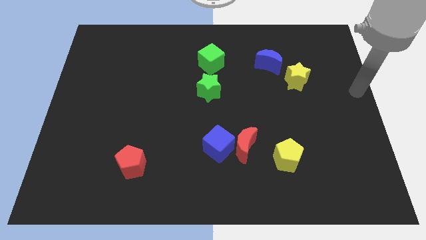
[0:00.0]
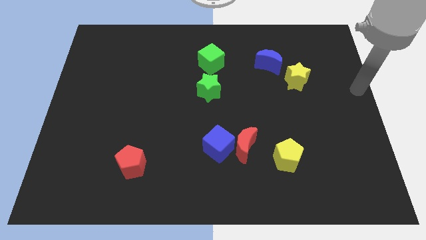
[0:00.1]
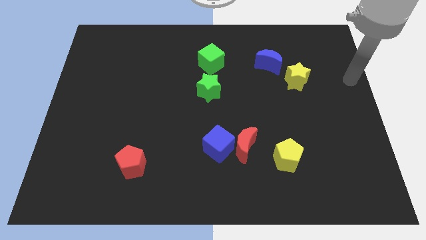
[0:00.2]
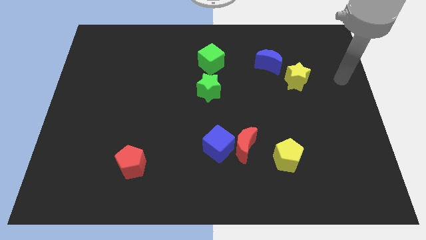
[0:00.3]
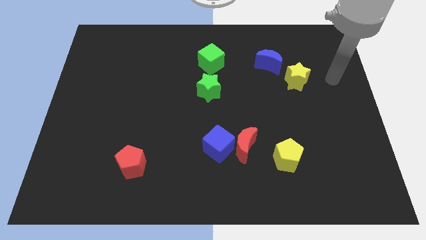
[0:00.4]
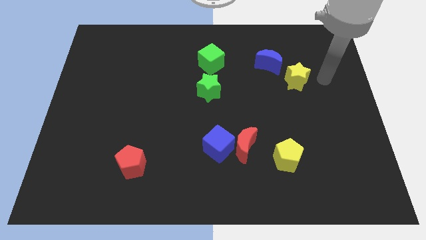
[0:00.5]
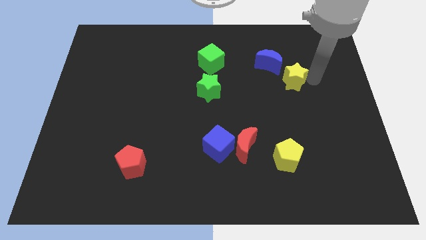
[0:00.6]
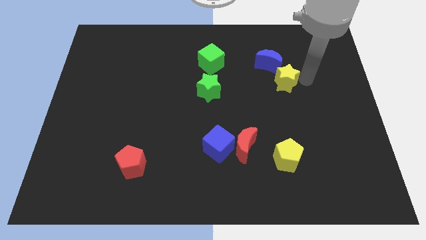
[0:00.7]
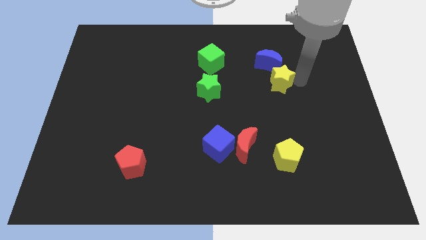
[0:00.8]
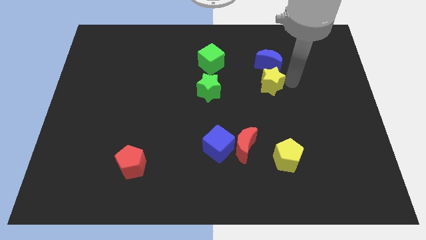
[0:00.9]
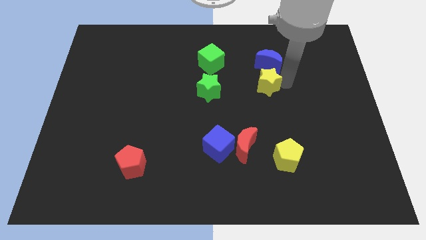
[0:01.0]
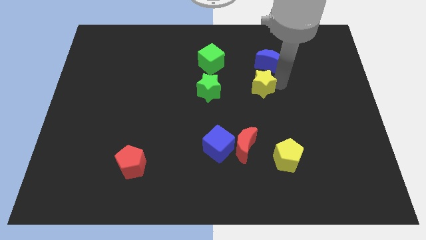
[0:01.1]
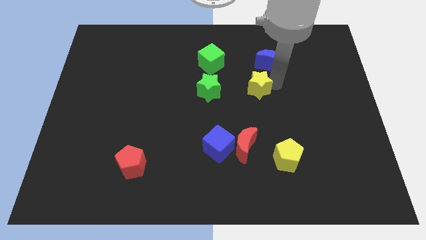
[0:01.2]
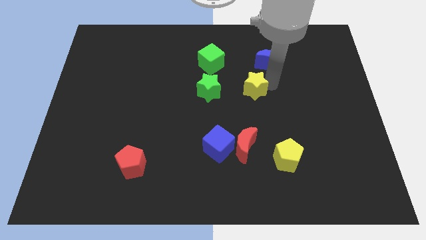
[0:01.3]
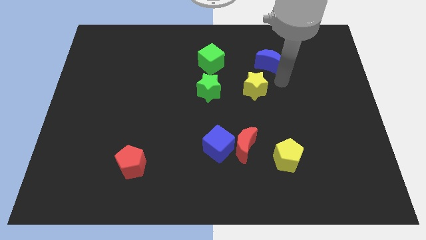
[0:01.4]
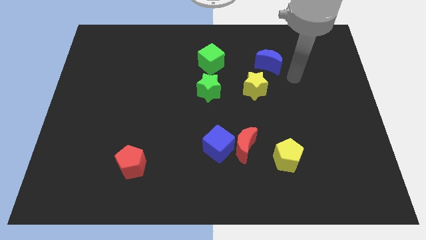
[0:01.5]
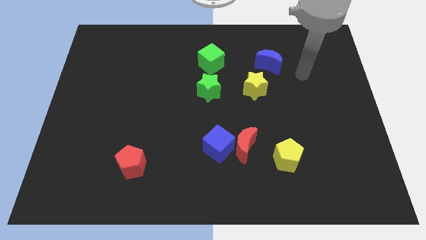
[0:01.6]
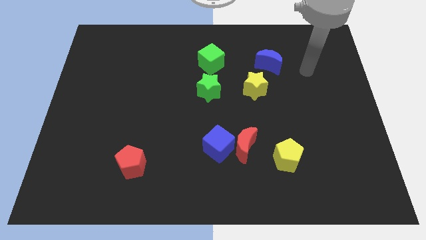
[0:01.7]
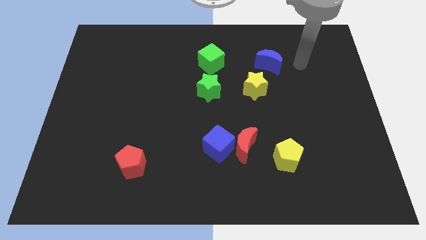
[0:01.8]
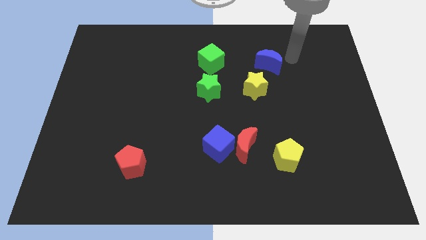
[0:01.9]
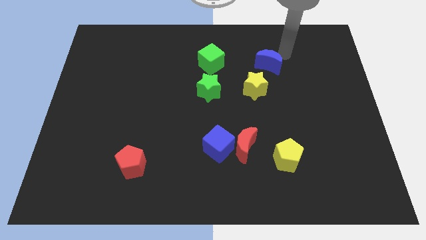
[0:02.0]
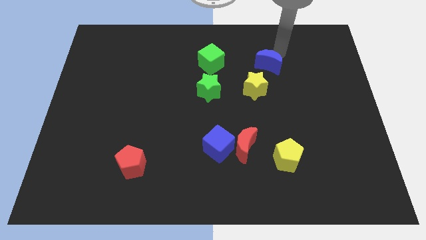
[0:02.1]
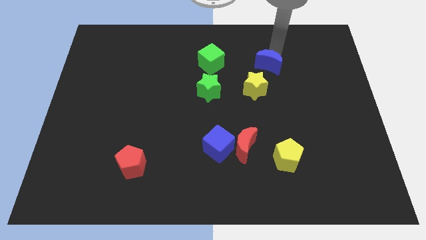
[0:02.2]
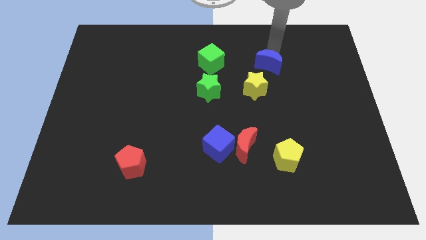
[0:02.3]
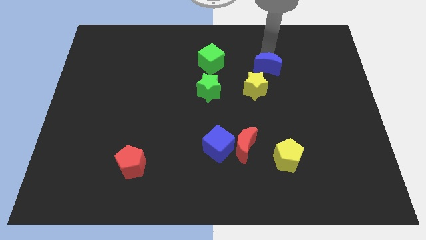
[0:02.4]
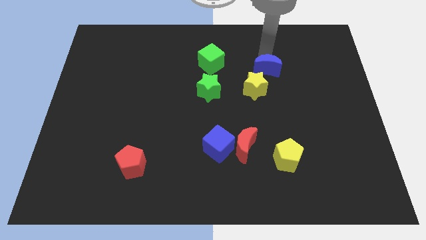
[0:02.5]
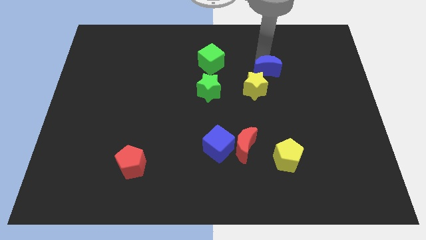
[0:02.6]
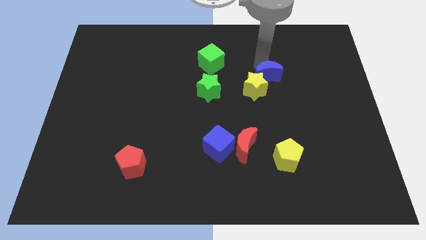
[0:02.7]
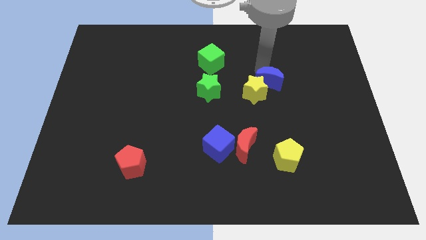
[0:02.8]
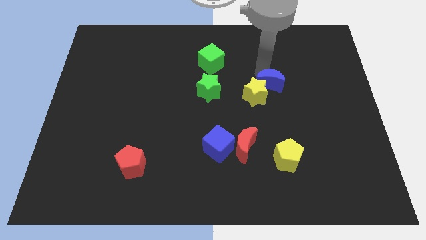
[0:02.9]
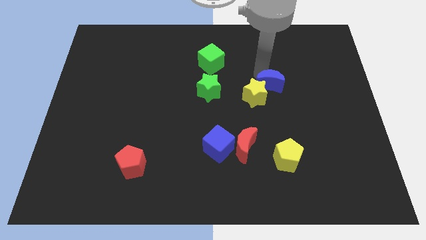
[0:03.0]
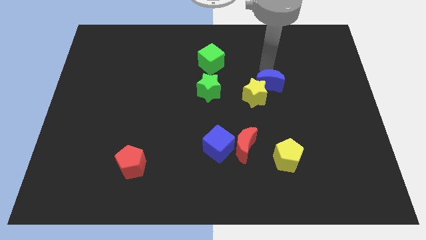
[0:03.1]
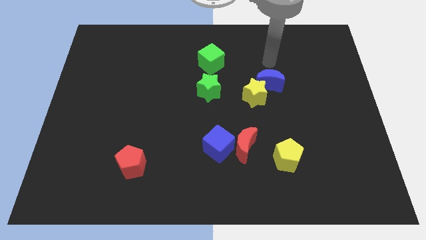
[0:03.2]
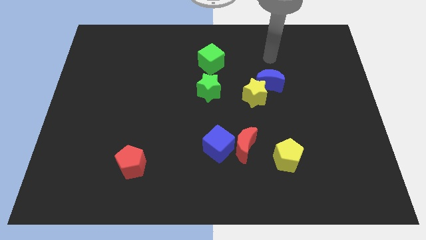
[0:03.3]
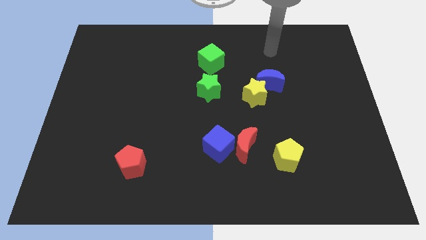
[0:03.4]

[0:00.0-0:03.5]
push the yellow star into the blue moon

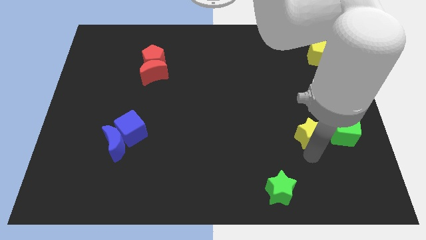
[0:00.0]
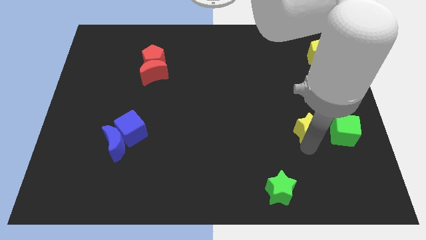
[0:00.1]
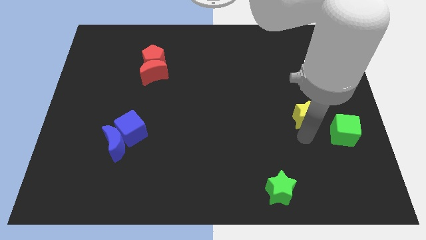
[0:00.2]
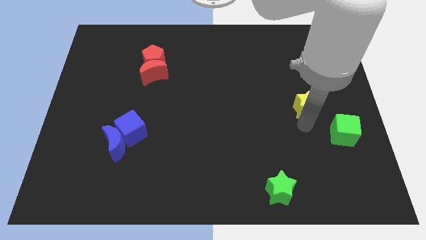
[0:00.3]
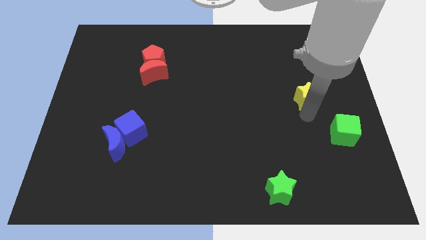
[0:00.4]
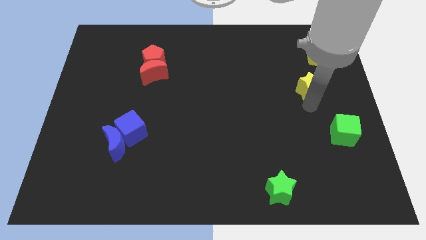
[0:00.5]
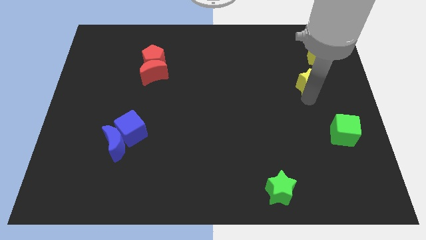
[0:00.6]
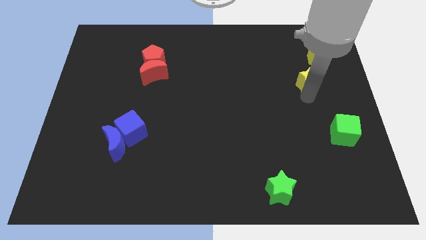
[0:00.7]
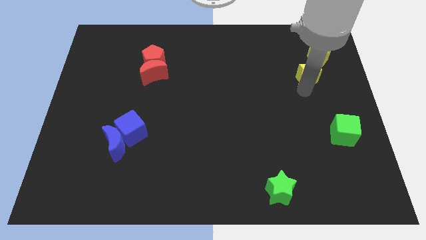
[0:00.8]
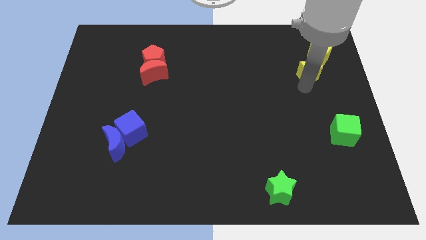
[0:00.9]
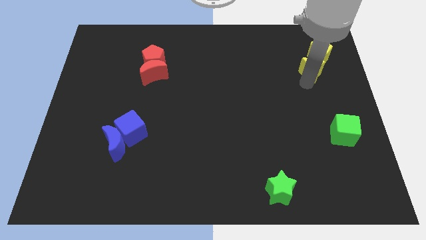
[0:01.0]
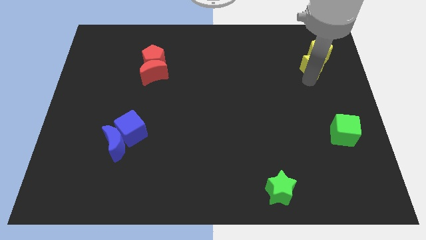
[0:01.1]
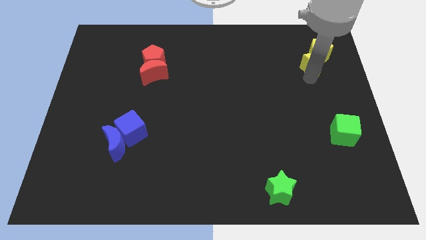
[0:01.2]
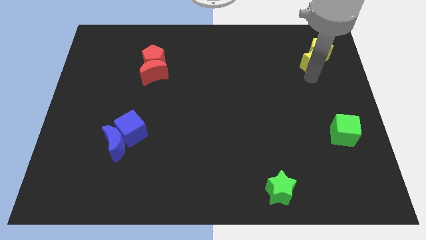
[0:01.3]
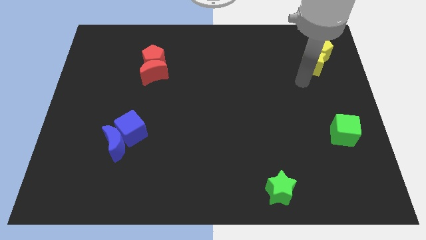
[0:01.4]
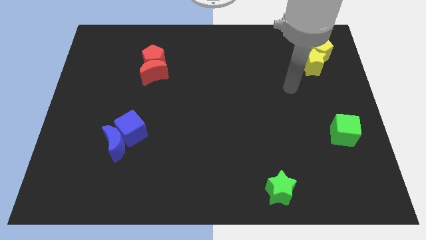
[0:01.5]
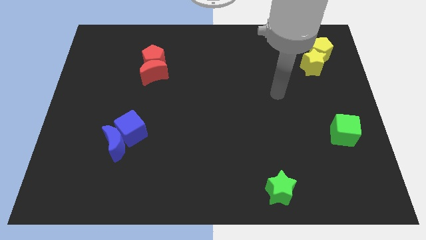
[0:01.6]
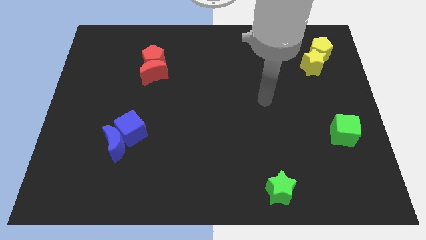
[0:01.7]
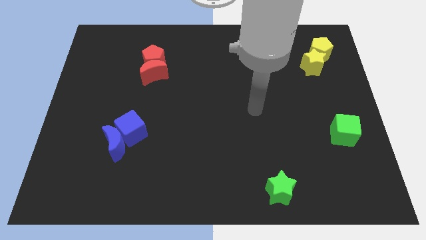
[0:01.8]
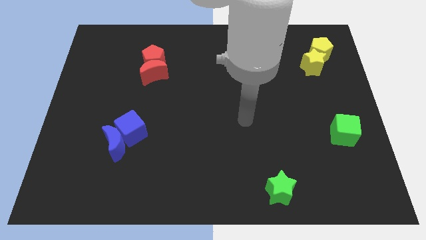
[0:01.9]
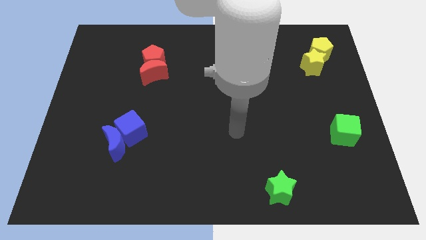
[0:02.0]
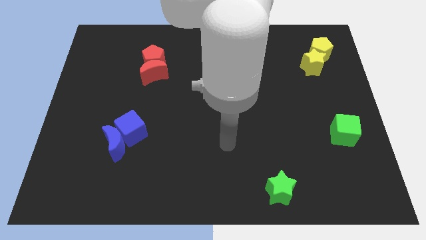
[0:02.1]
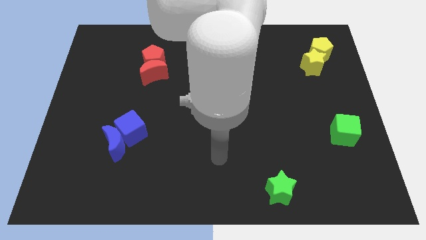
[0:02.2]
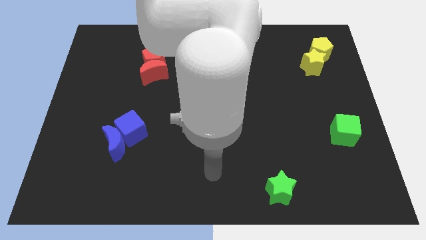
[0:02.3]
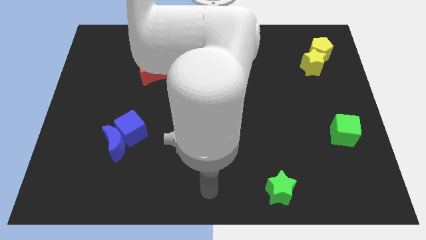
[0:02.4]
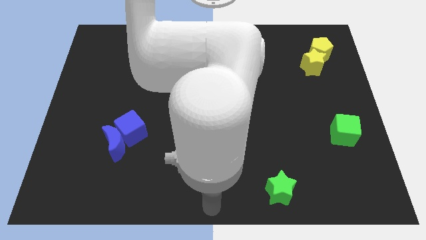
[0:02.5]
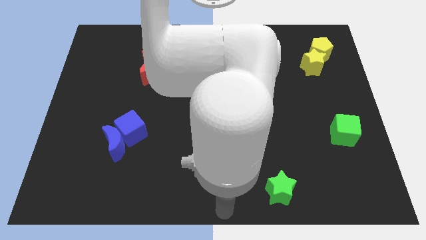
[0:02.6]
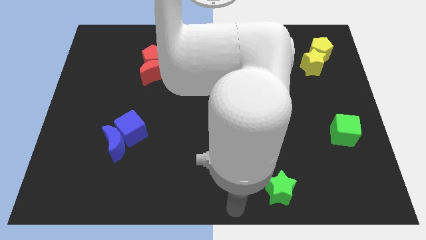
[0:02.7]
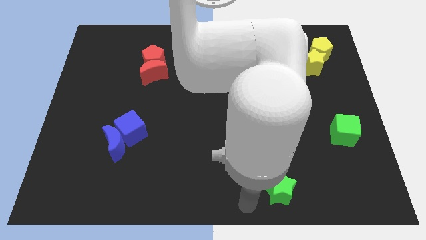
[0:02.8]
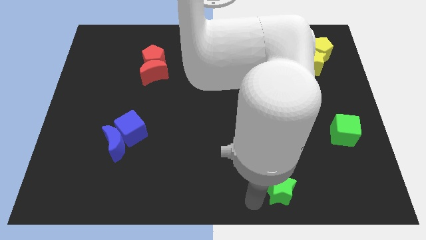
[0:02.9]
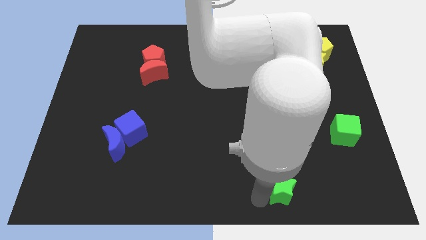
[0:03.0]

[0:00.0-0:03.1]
push yellow star into the yellow pentagon

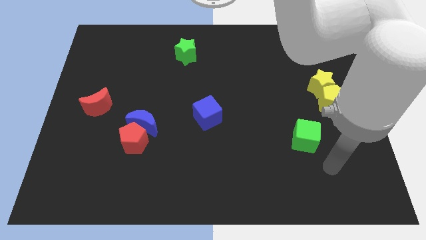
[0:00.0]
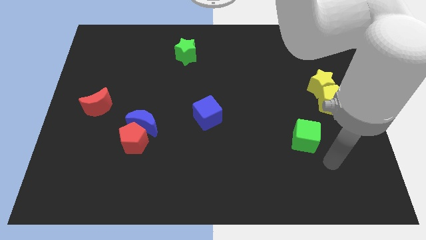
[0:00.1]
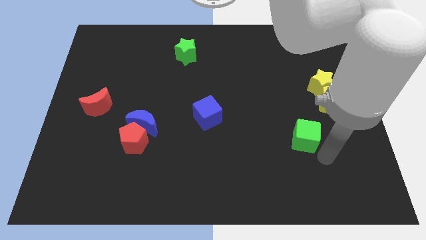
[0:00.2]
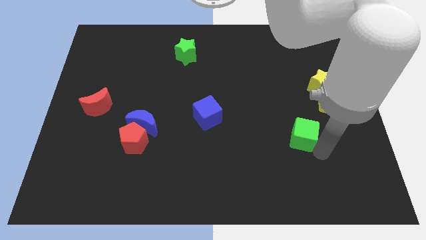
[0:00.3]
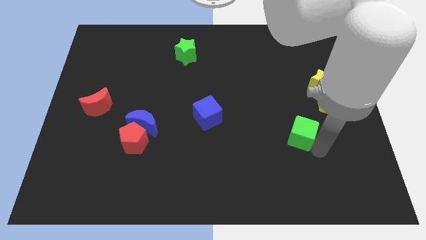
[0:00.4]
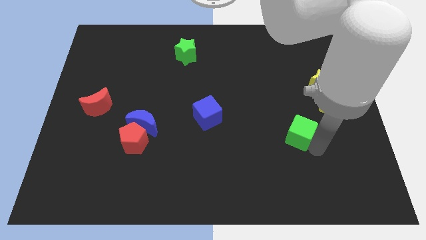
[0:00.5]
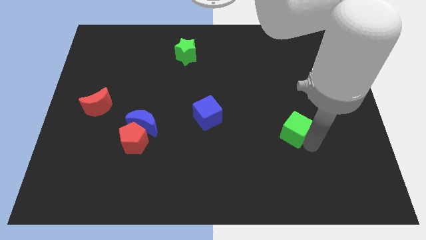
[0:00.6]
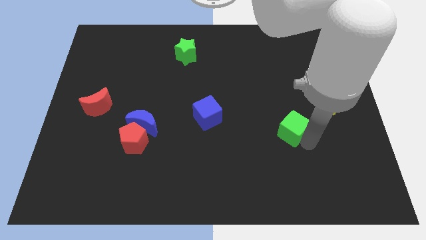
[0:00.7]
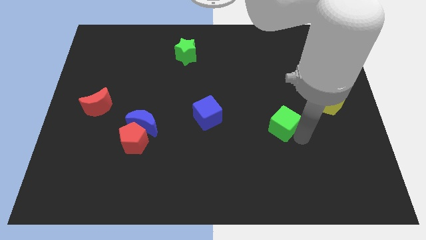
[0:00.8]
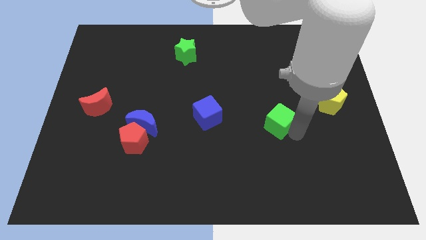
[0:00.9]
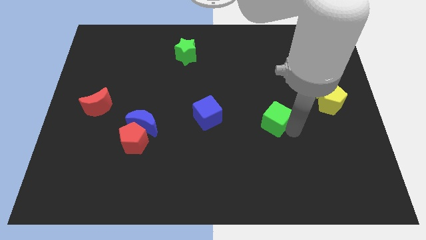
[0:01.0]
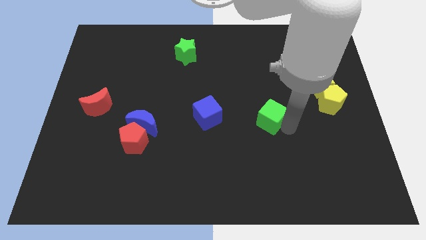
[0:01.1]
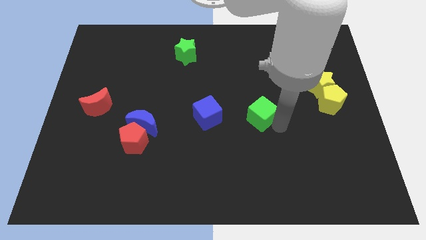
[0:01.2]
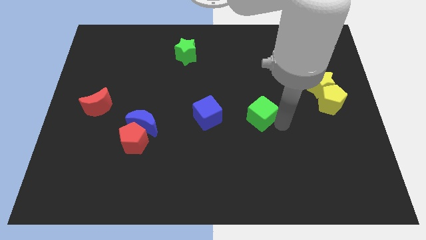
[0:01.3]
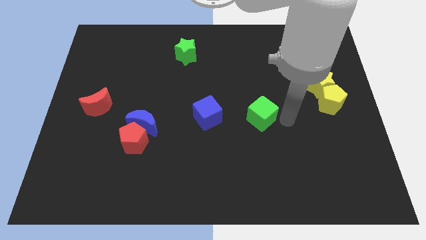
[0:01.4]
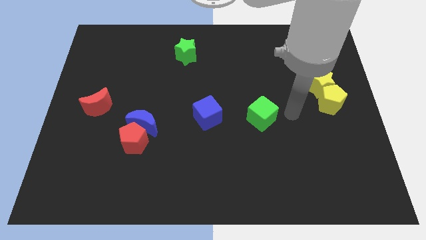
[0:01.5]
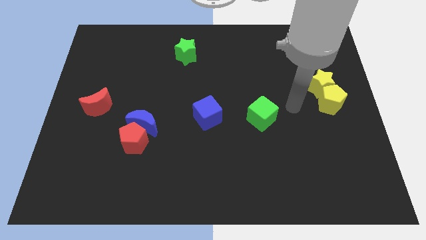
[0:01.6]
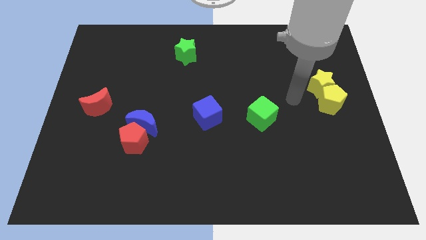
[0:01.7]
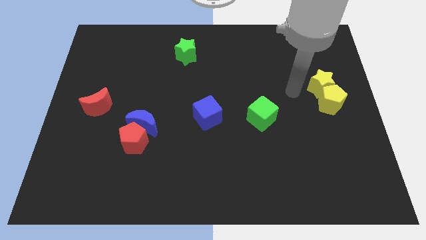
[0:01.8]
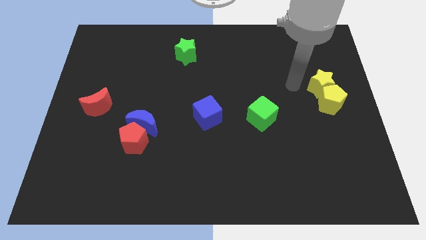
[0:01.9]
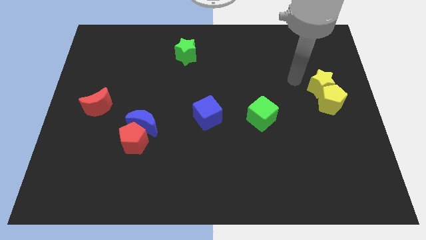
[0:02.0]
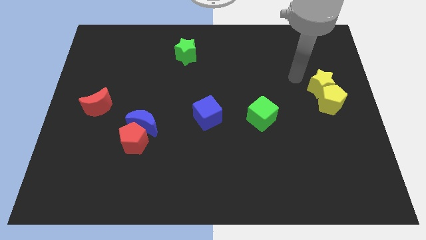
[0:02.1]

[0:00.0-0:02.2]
place the green cube in between blue cube and yellow pentagon

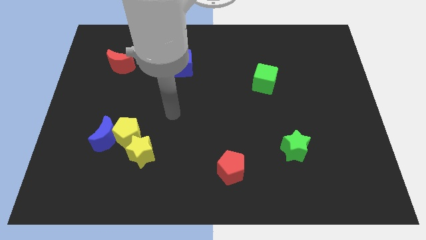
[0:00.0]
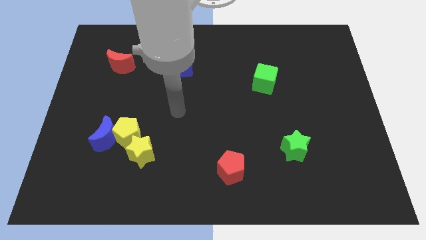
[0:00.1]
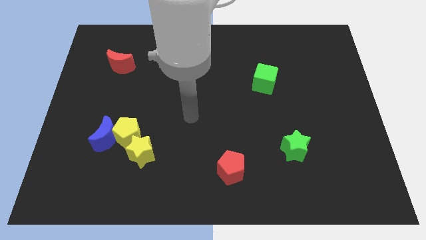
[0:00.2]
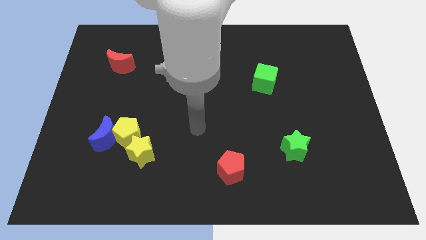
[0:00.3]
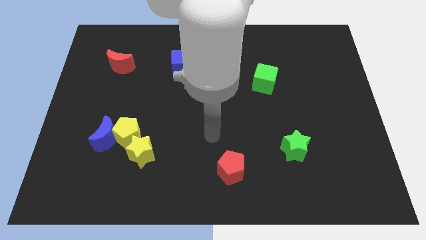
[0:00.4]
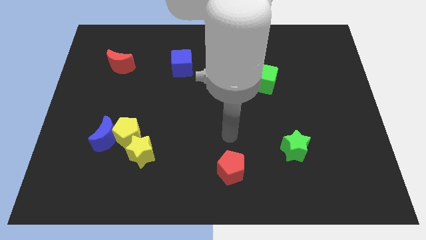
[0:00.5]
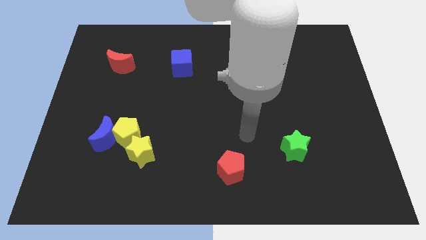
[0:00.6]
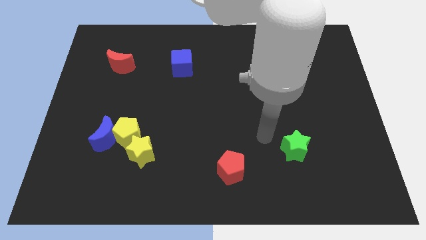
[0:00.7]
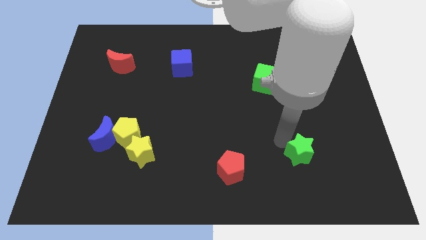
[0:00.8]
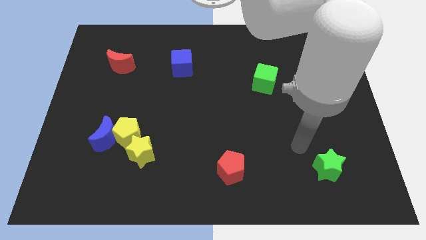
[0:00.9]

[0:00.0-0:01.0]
place your hand at the top left of the green star
